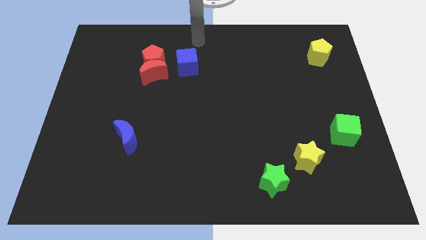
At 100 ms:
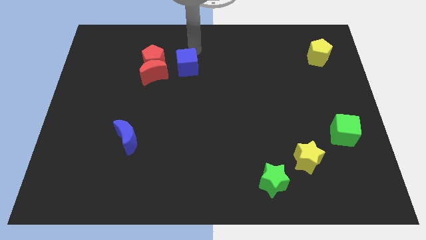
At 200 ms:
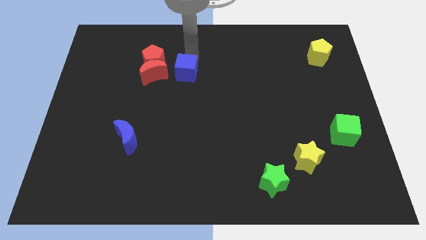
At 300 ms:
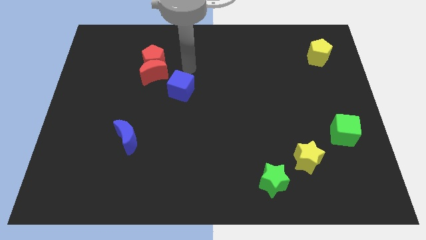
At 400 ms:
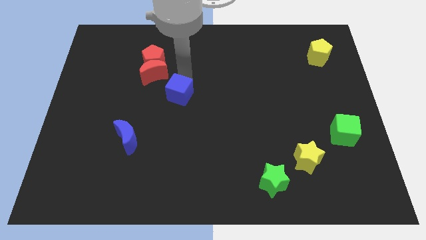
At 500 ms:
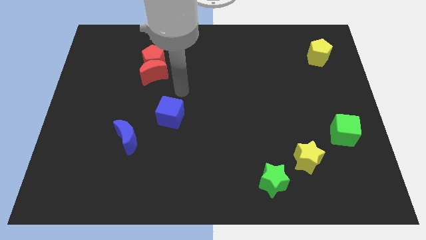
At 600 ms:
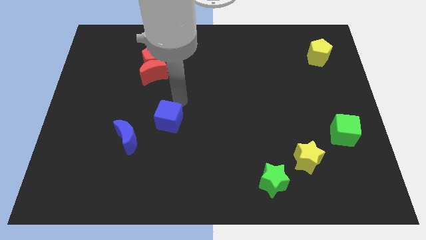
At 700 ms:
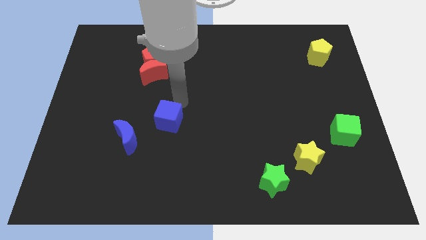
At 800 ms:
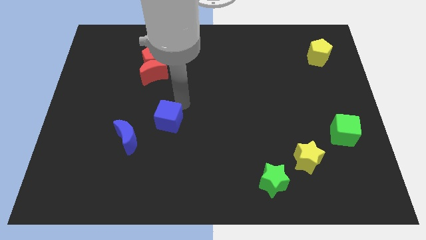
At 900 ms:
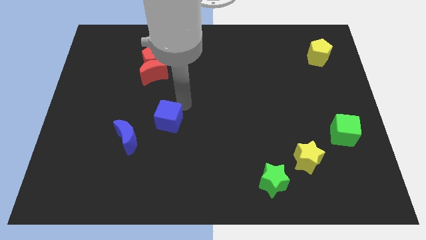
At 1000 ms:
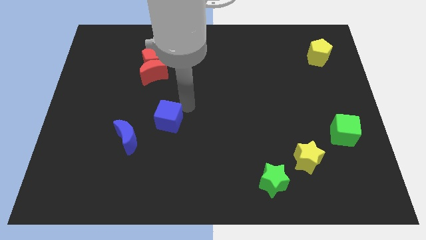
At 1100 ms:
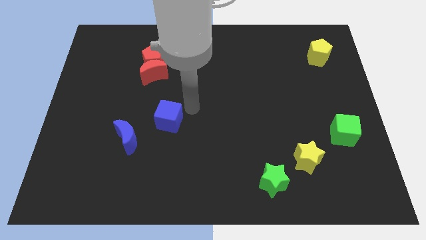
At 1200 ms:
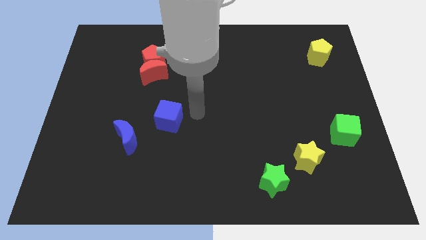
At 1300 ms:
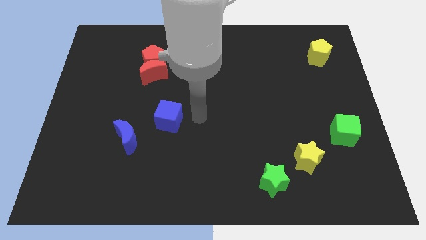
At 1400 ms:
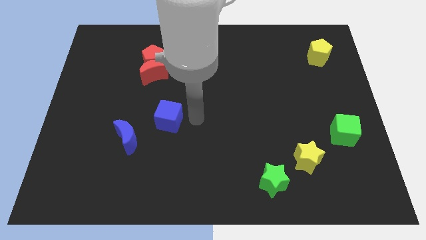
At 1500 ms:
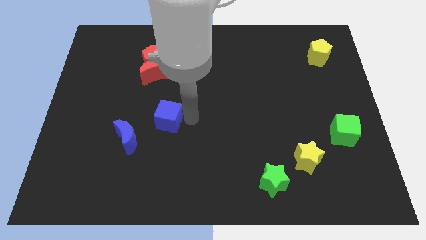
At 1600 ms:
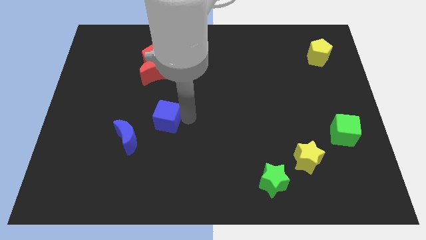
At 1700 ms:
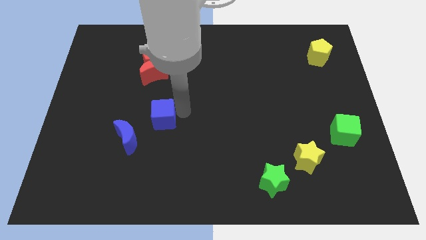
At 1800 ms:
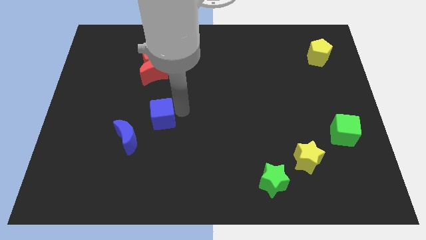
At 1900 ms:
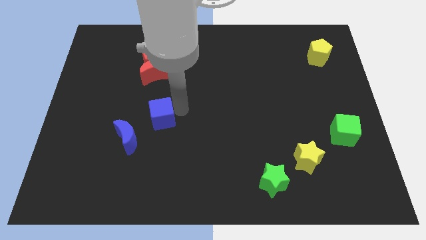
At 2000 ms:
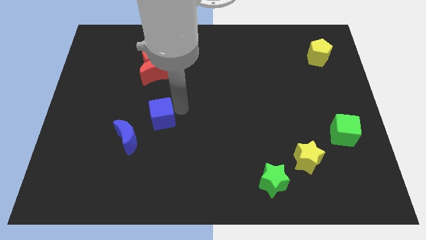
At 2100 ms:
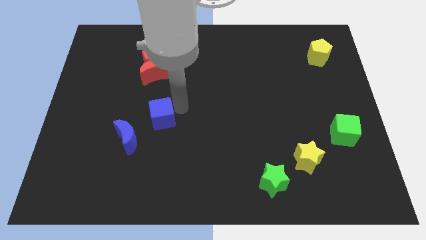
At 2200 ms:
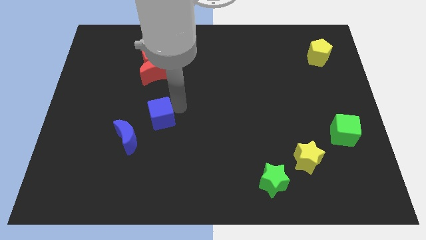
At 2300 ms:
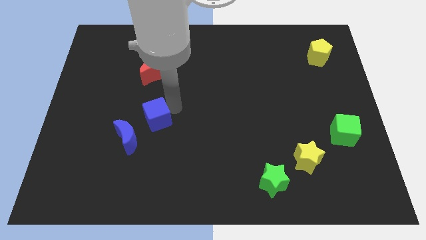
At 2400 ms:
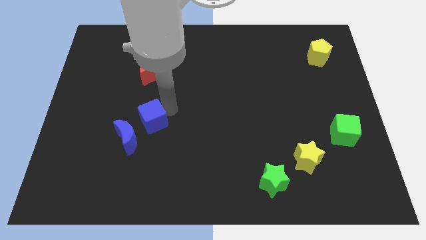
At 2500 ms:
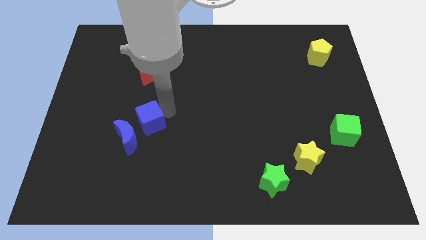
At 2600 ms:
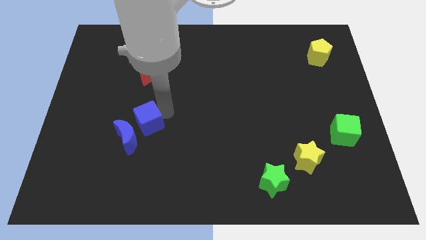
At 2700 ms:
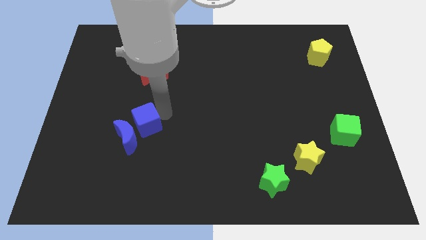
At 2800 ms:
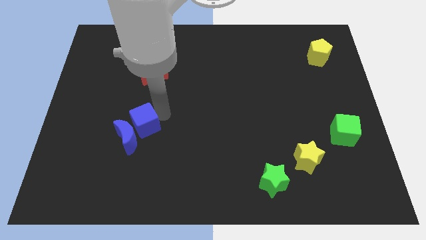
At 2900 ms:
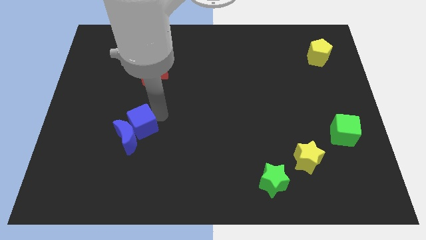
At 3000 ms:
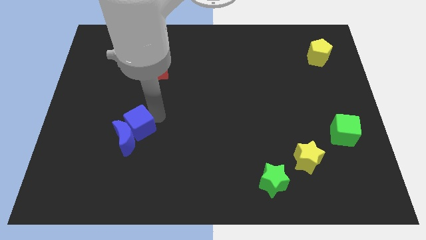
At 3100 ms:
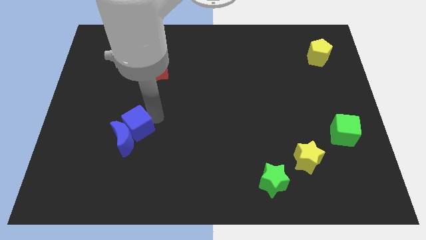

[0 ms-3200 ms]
slide the blue cube into the blue moon

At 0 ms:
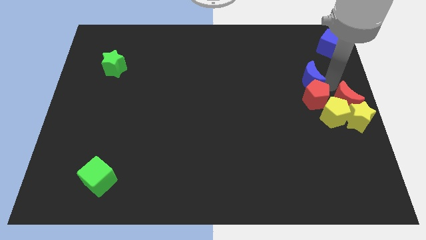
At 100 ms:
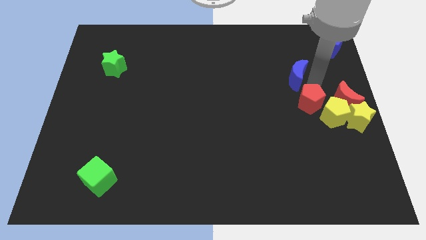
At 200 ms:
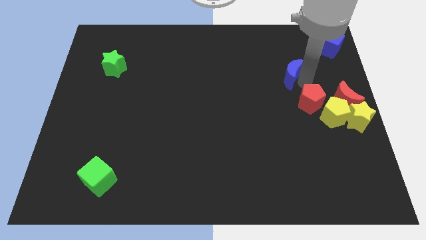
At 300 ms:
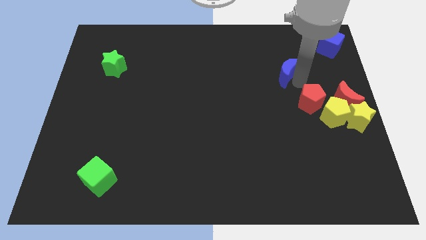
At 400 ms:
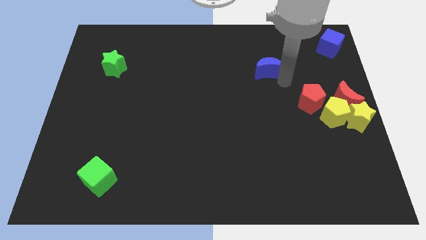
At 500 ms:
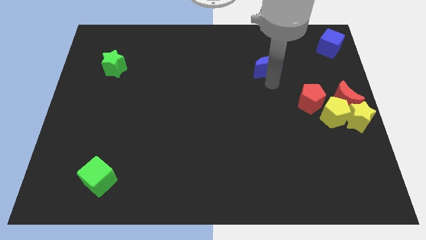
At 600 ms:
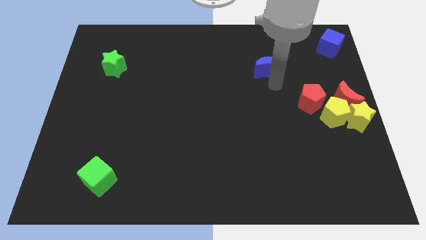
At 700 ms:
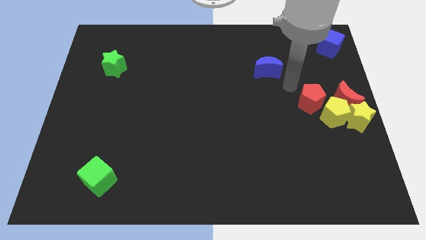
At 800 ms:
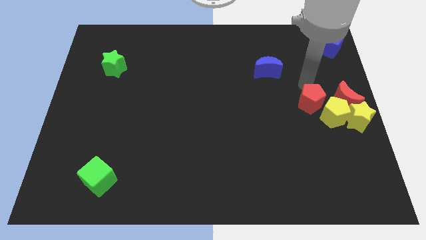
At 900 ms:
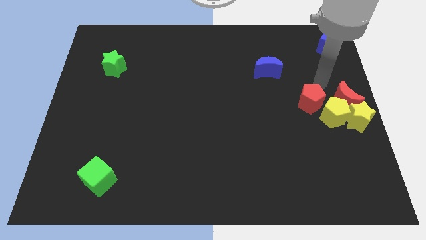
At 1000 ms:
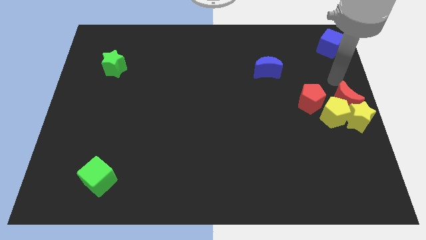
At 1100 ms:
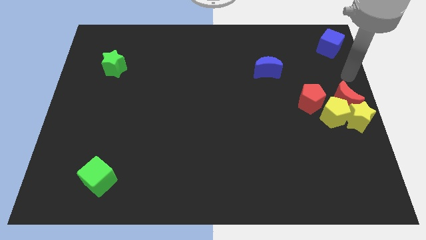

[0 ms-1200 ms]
separate the blue moon from the red pentagon

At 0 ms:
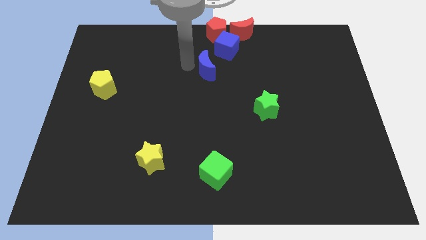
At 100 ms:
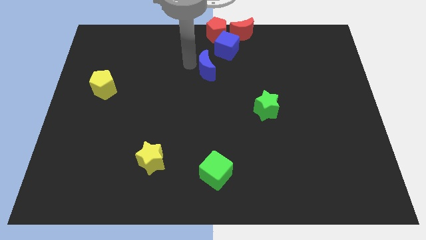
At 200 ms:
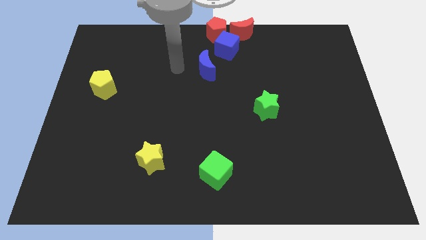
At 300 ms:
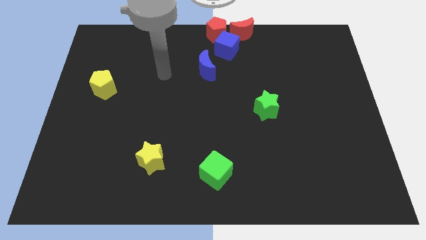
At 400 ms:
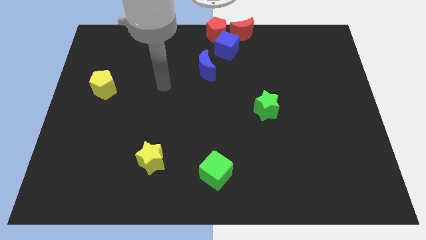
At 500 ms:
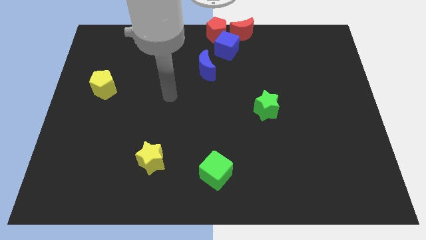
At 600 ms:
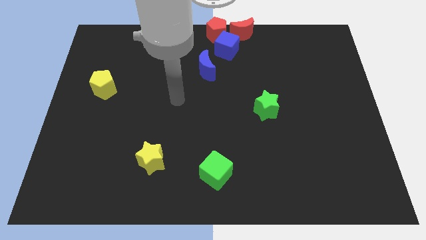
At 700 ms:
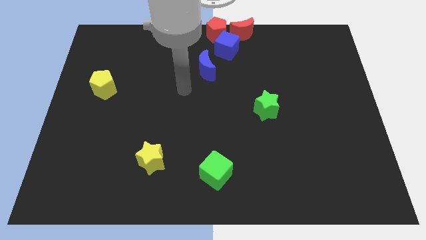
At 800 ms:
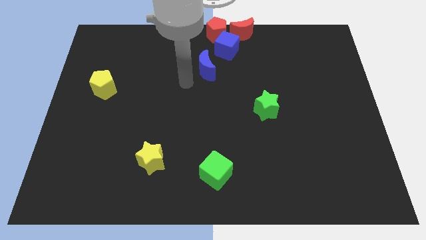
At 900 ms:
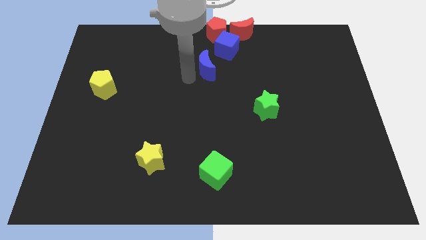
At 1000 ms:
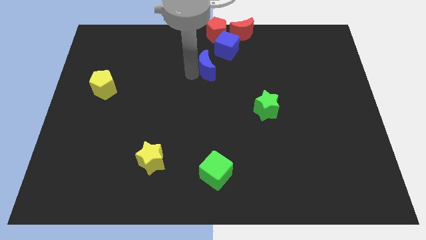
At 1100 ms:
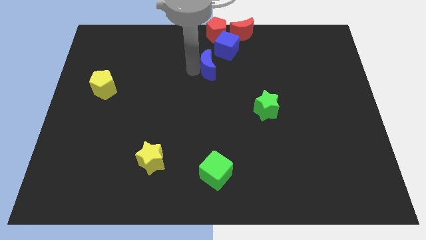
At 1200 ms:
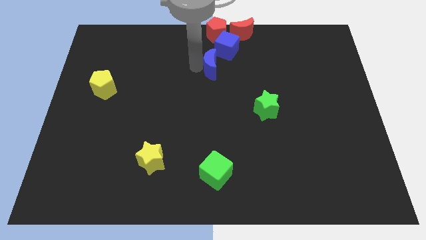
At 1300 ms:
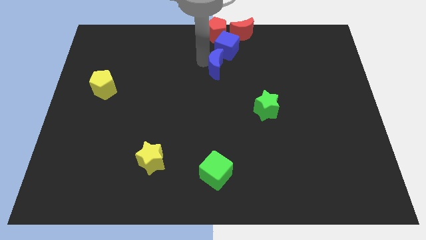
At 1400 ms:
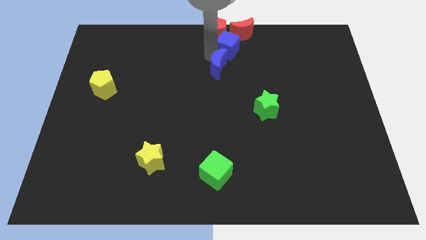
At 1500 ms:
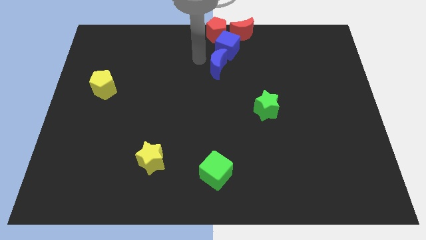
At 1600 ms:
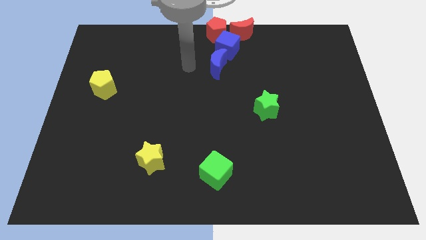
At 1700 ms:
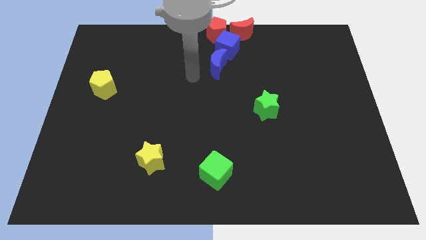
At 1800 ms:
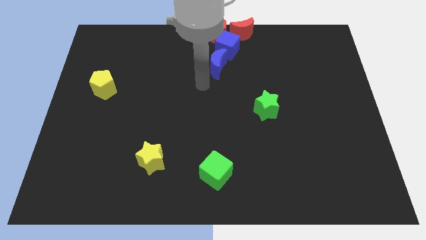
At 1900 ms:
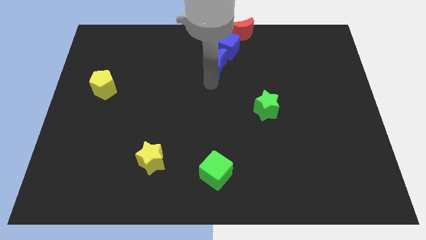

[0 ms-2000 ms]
slide the blue crescent to the bottom left side of the blue cube

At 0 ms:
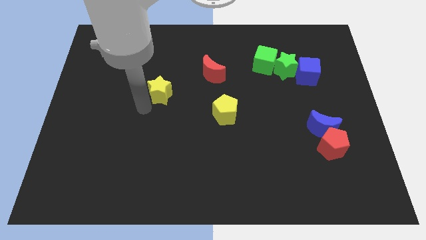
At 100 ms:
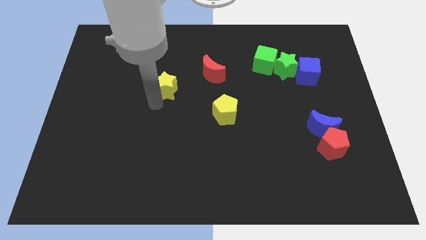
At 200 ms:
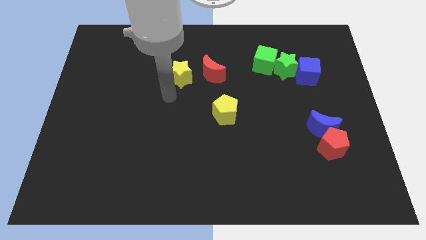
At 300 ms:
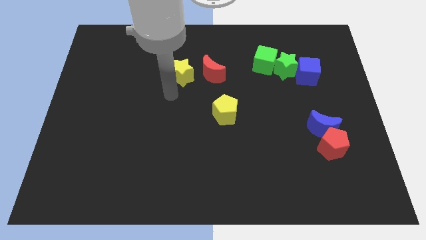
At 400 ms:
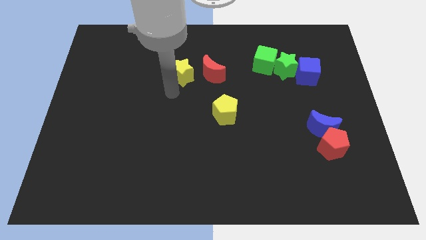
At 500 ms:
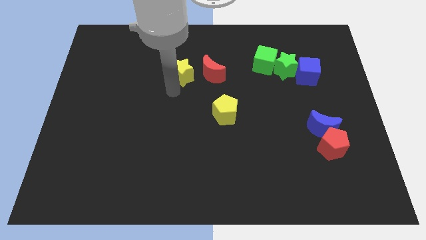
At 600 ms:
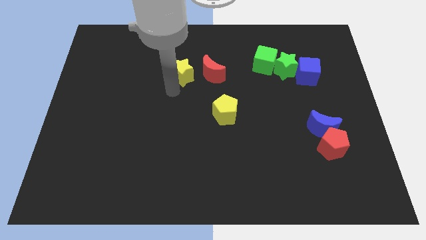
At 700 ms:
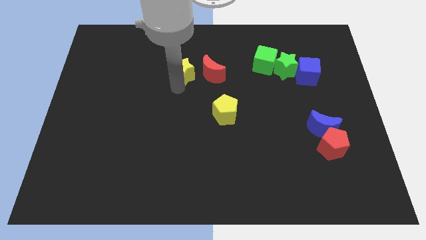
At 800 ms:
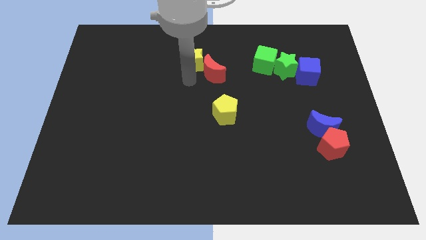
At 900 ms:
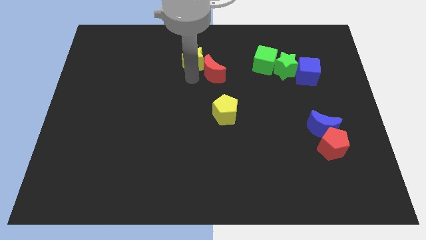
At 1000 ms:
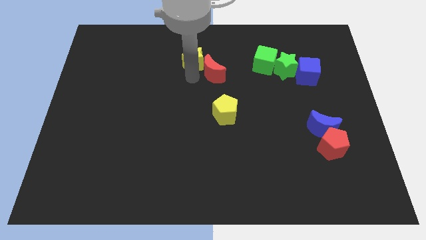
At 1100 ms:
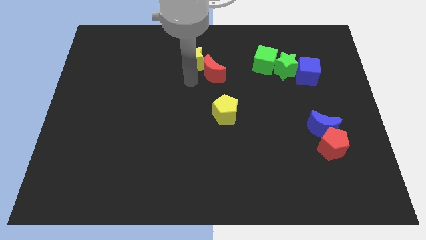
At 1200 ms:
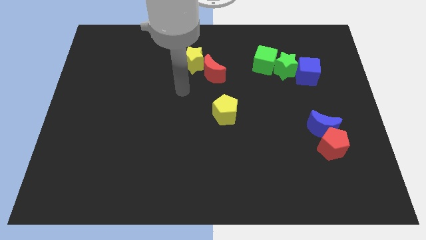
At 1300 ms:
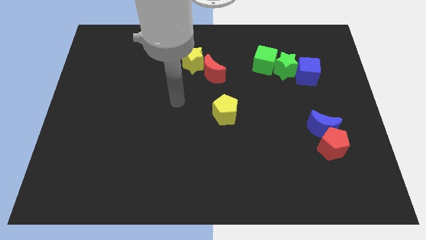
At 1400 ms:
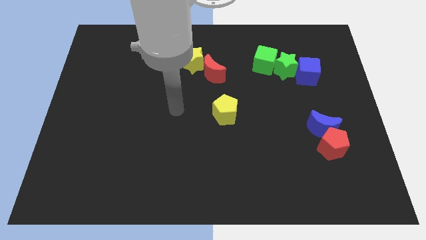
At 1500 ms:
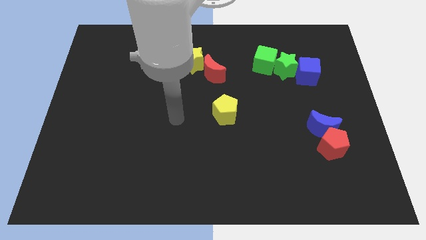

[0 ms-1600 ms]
push the yellow star into the red moon

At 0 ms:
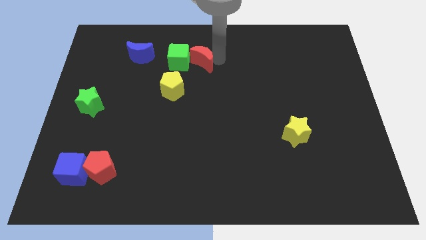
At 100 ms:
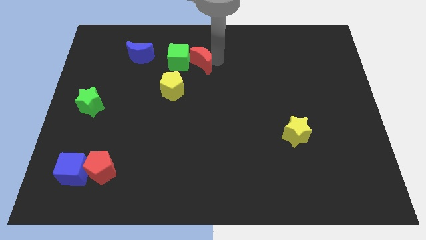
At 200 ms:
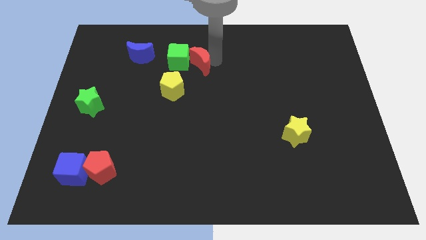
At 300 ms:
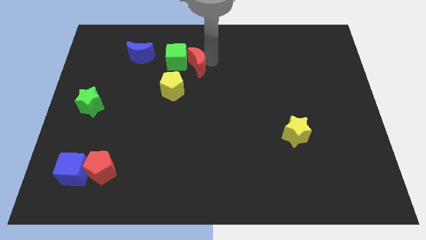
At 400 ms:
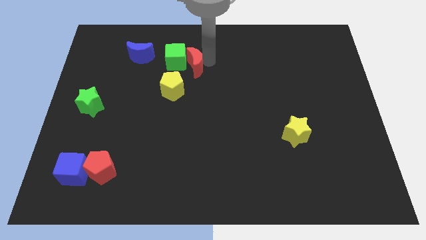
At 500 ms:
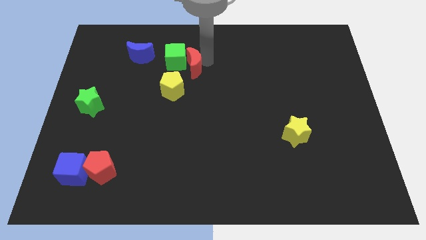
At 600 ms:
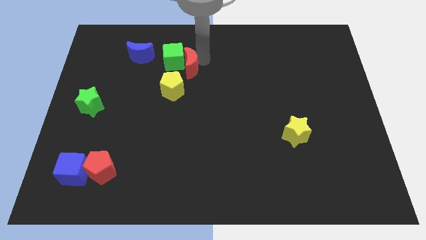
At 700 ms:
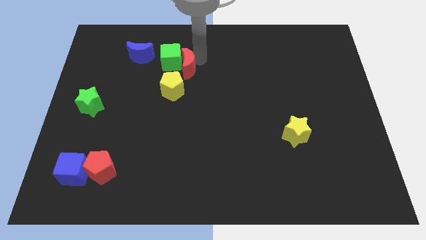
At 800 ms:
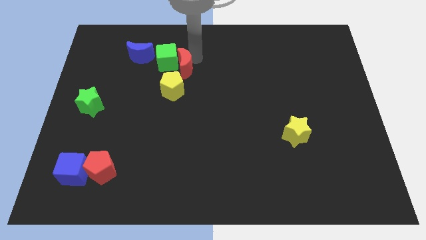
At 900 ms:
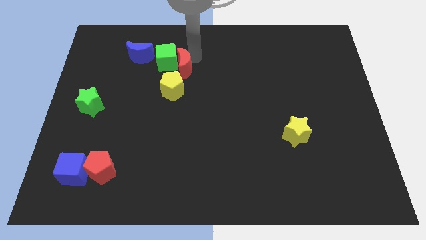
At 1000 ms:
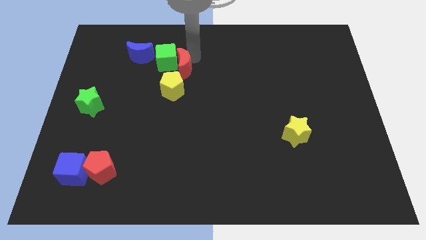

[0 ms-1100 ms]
move the red moon and green cube together above the yellow pentagon
